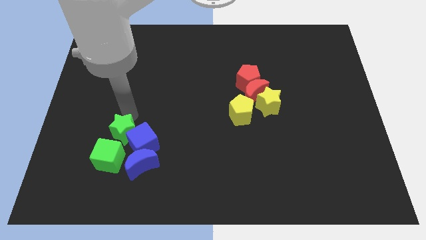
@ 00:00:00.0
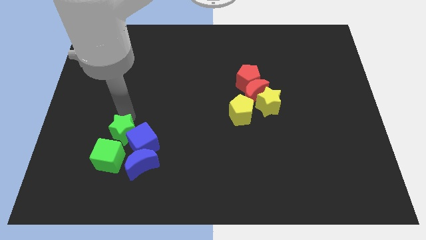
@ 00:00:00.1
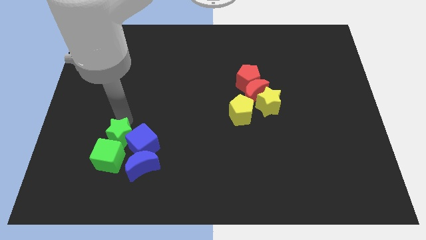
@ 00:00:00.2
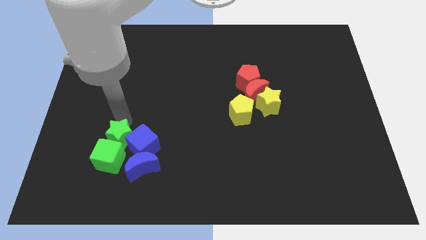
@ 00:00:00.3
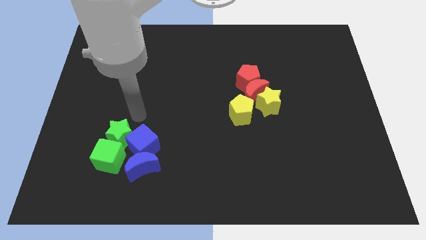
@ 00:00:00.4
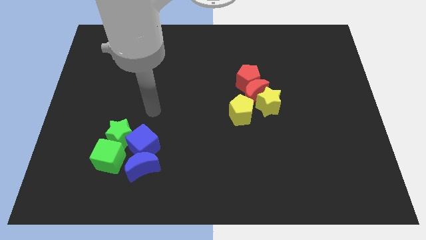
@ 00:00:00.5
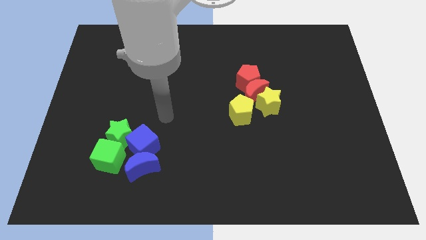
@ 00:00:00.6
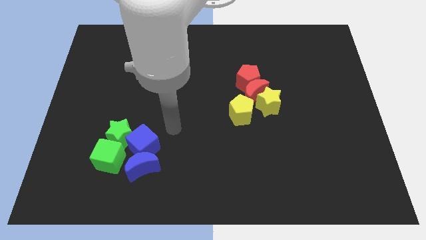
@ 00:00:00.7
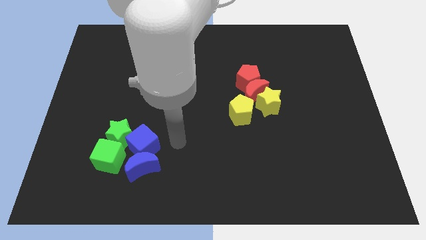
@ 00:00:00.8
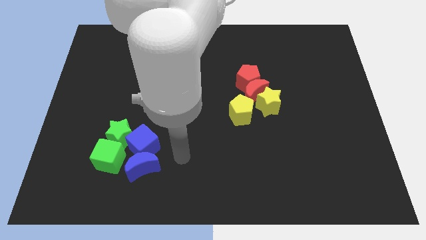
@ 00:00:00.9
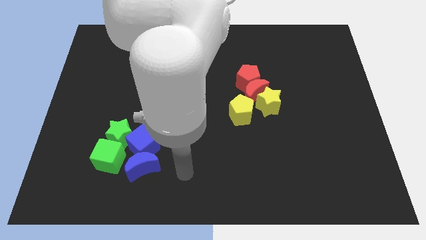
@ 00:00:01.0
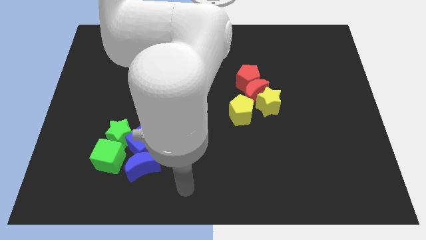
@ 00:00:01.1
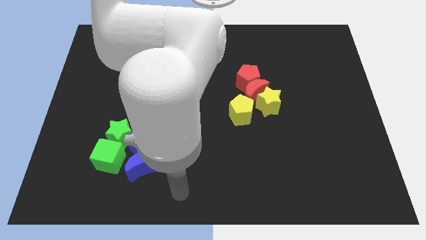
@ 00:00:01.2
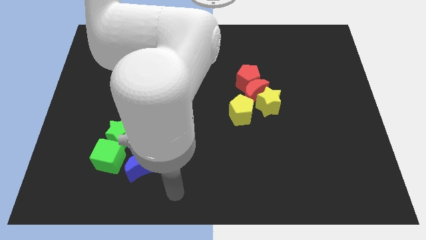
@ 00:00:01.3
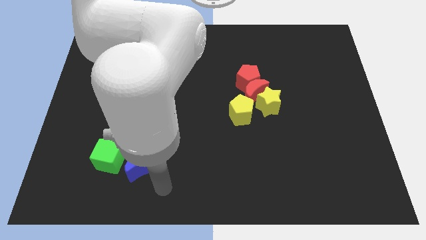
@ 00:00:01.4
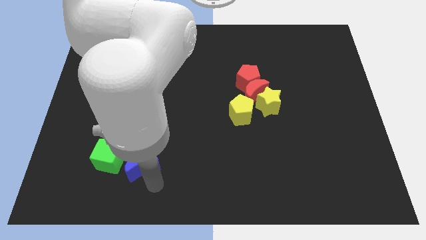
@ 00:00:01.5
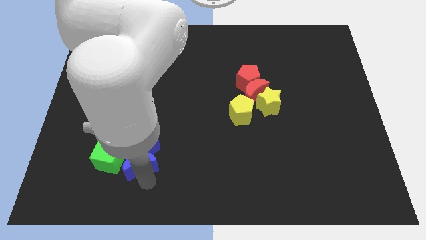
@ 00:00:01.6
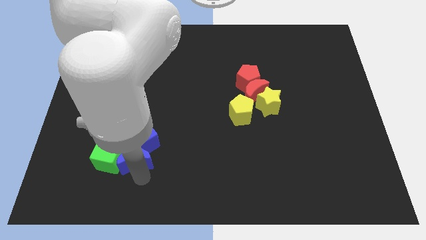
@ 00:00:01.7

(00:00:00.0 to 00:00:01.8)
move your arm into the blue moon

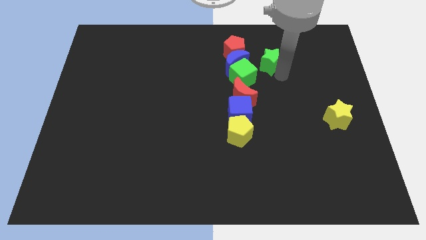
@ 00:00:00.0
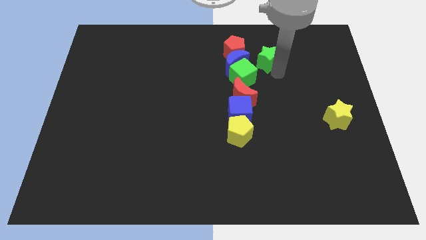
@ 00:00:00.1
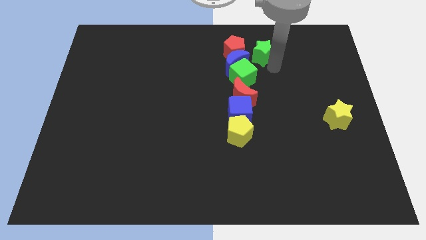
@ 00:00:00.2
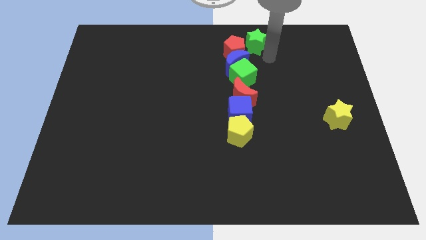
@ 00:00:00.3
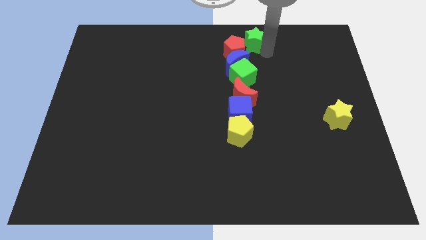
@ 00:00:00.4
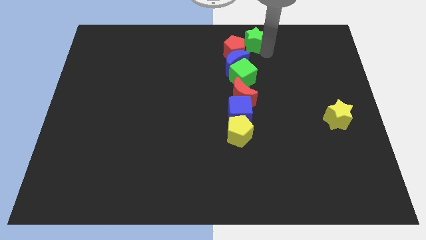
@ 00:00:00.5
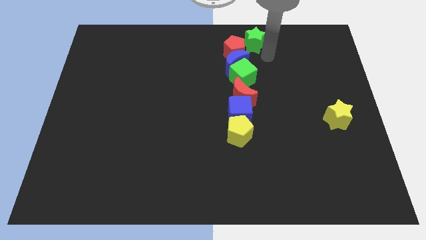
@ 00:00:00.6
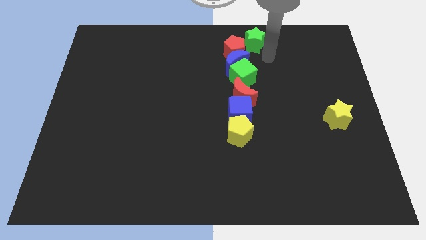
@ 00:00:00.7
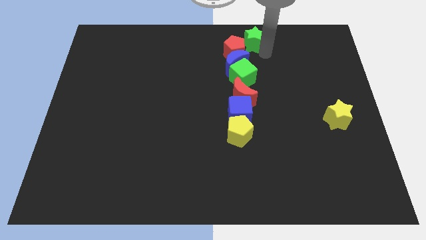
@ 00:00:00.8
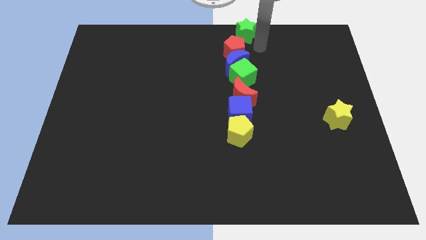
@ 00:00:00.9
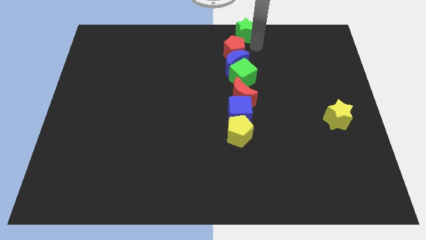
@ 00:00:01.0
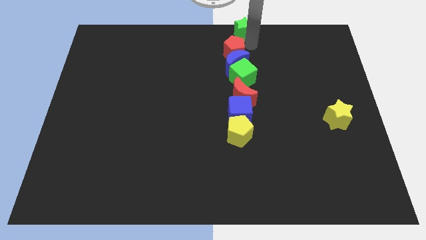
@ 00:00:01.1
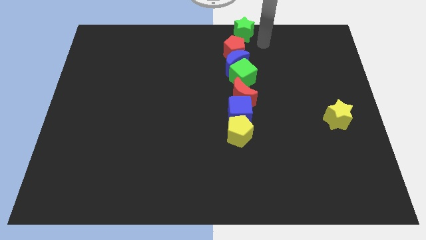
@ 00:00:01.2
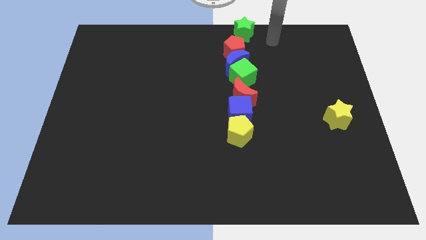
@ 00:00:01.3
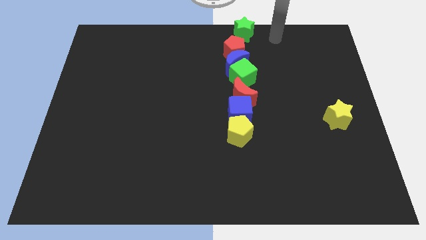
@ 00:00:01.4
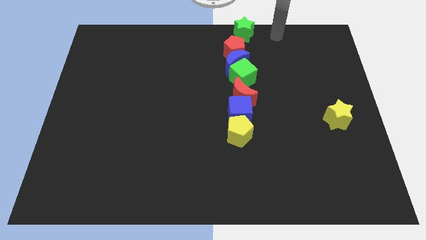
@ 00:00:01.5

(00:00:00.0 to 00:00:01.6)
move the green star to the top side of the board

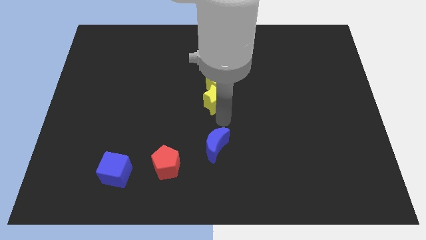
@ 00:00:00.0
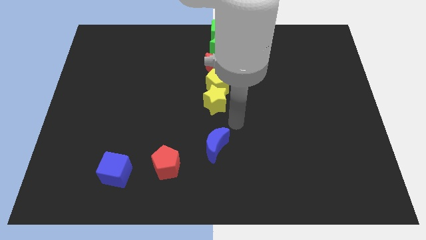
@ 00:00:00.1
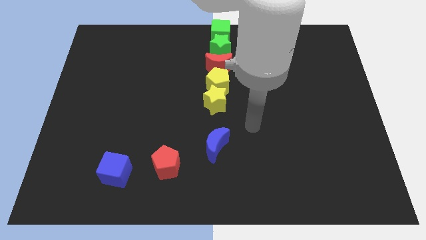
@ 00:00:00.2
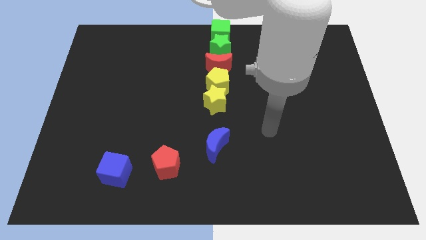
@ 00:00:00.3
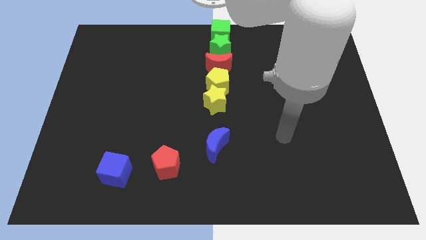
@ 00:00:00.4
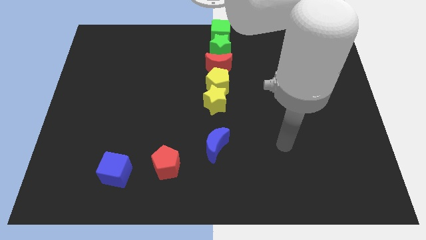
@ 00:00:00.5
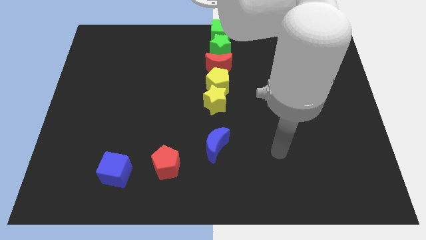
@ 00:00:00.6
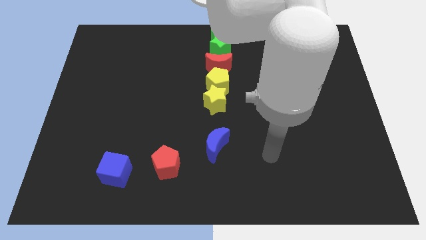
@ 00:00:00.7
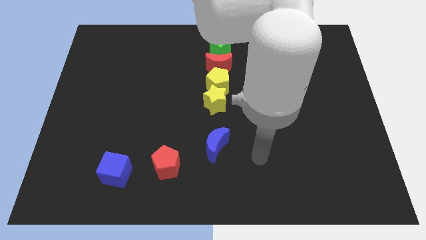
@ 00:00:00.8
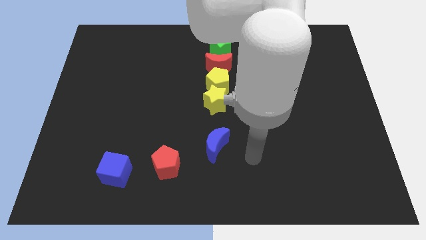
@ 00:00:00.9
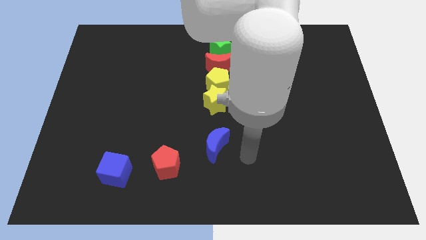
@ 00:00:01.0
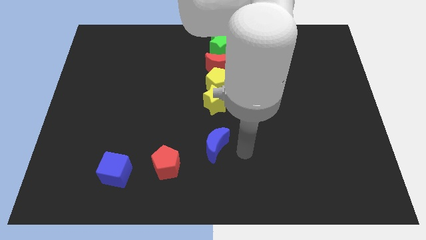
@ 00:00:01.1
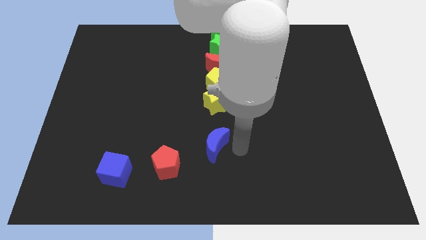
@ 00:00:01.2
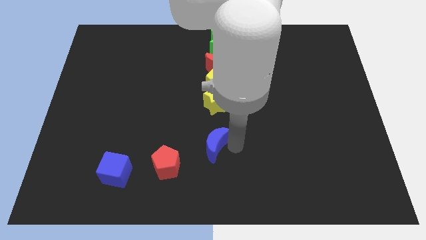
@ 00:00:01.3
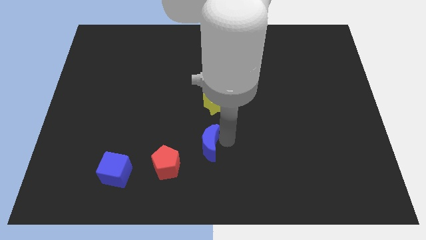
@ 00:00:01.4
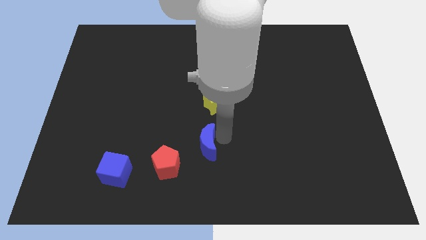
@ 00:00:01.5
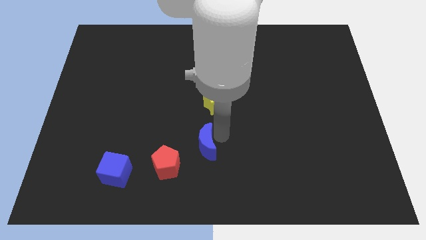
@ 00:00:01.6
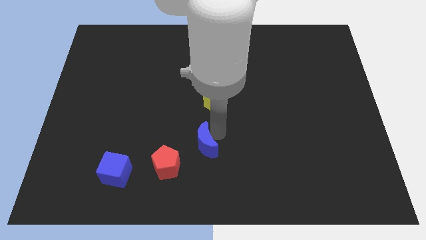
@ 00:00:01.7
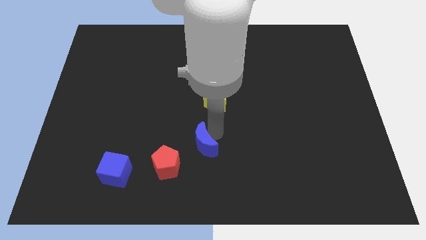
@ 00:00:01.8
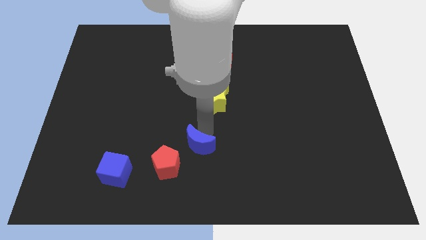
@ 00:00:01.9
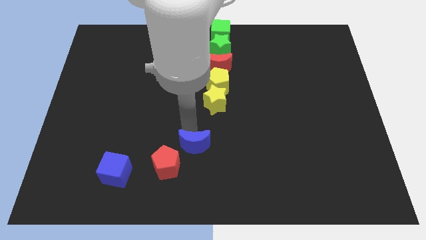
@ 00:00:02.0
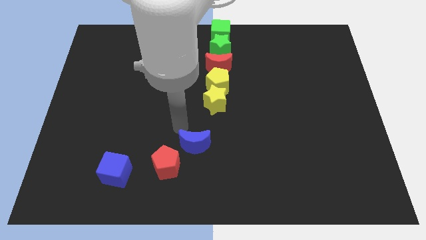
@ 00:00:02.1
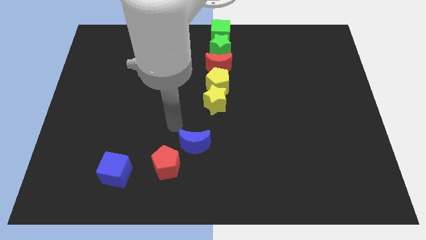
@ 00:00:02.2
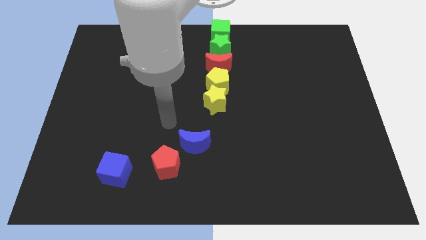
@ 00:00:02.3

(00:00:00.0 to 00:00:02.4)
move the blue moon slightly to the left

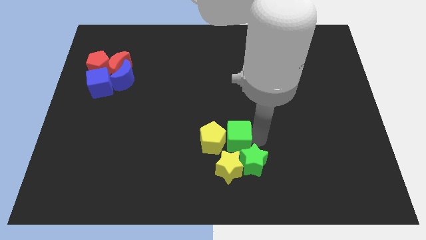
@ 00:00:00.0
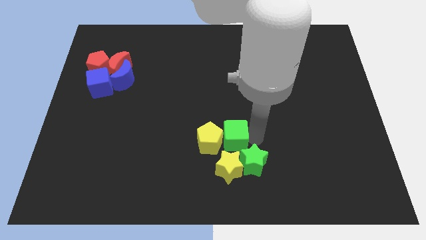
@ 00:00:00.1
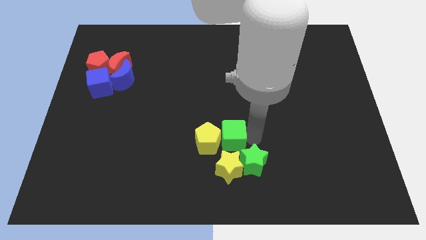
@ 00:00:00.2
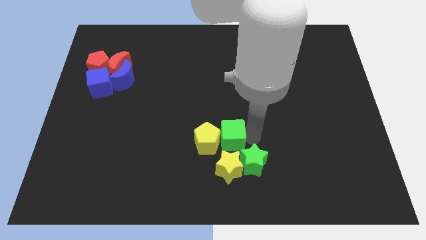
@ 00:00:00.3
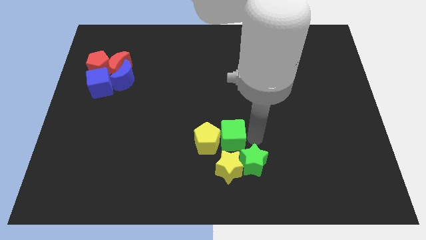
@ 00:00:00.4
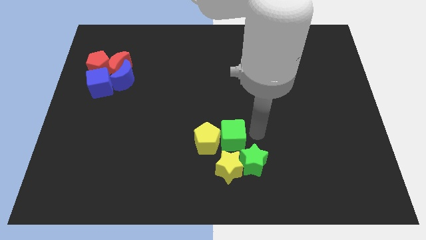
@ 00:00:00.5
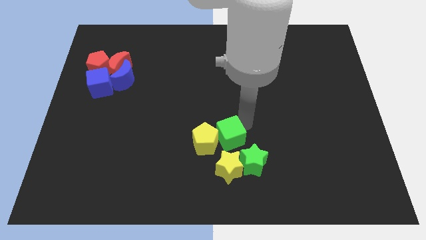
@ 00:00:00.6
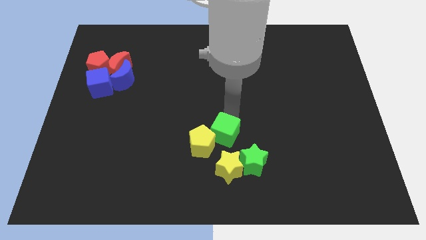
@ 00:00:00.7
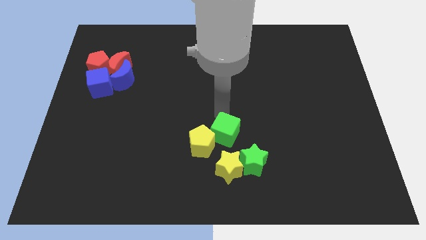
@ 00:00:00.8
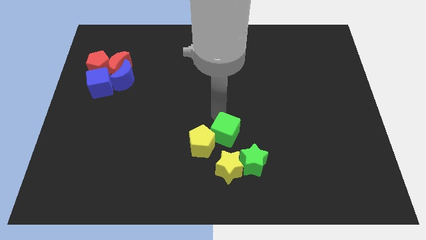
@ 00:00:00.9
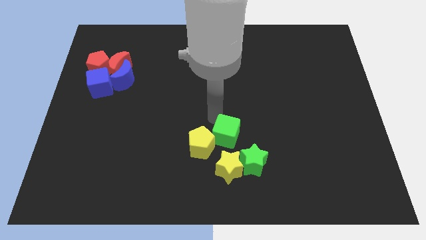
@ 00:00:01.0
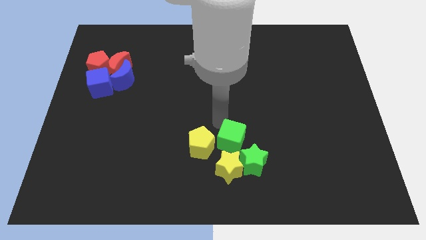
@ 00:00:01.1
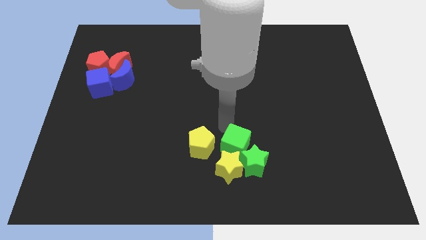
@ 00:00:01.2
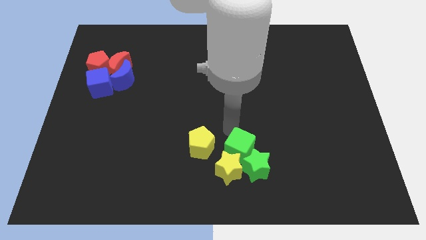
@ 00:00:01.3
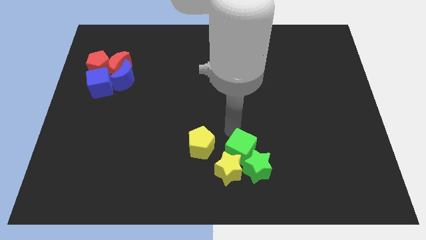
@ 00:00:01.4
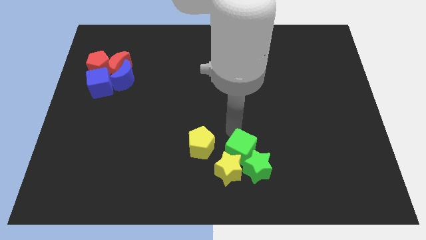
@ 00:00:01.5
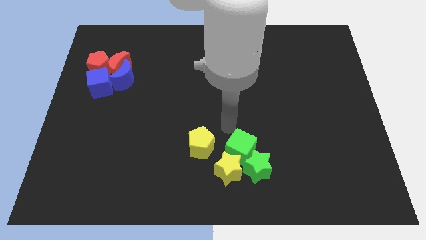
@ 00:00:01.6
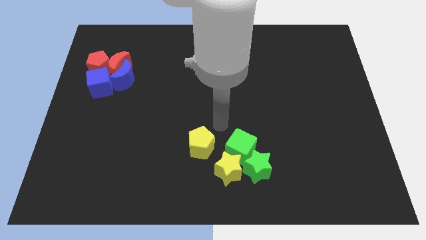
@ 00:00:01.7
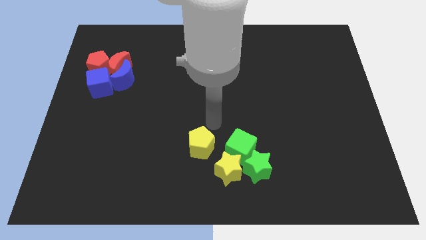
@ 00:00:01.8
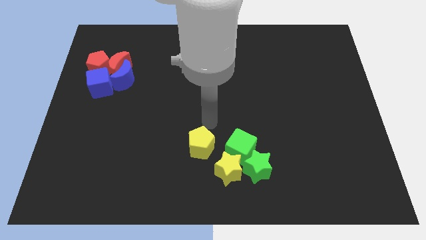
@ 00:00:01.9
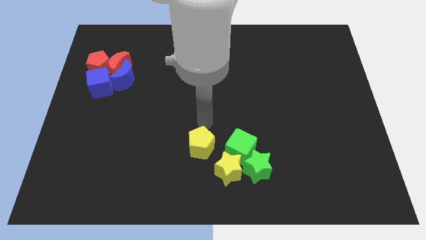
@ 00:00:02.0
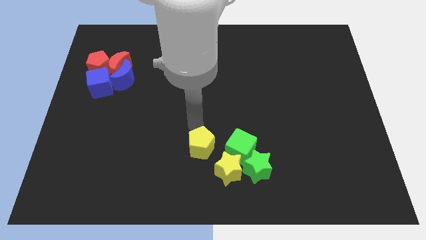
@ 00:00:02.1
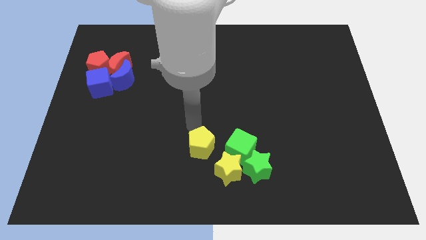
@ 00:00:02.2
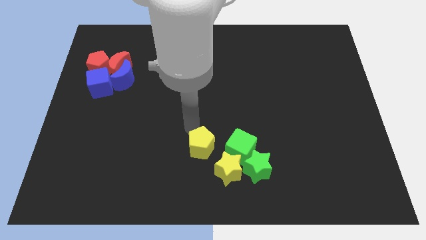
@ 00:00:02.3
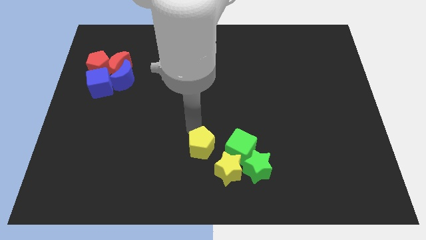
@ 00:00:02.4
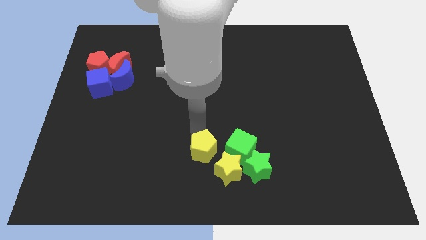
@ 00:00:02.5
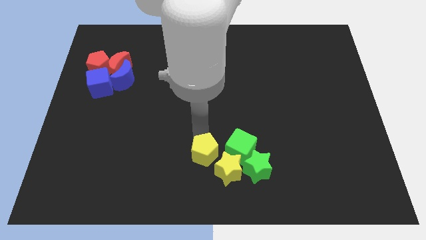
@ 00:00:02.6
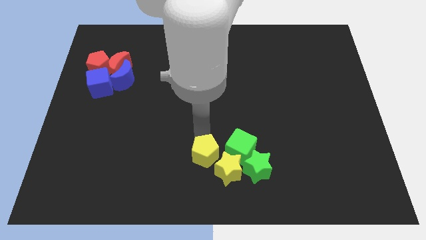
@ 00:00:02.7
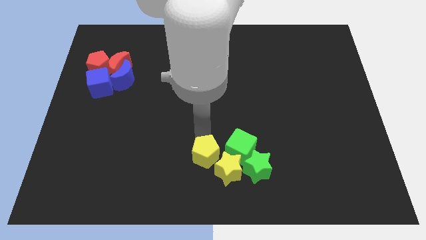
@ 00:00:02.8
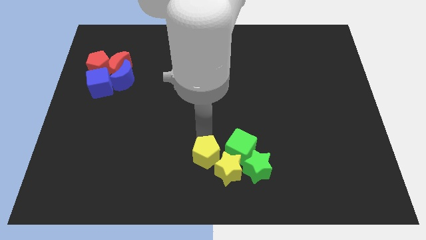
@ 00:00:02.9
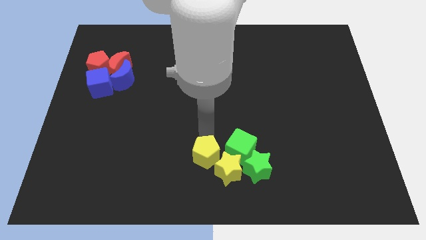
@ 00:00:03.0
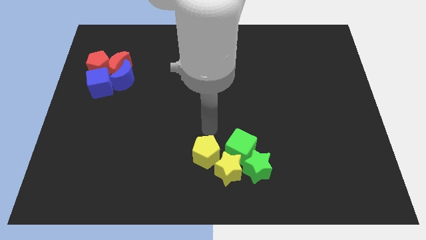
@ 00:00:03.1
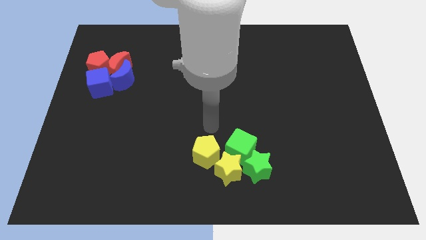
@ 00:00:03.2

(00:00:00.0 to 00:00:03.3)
arrange the group of blocks at the bottom side of the table
